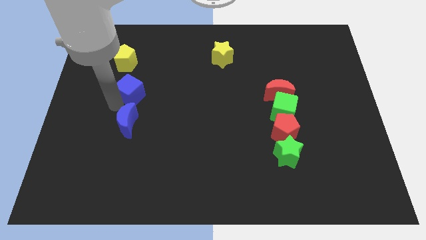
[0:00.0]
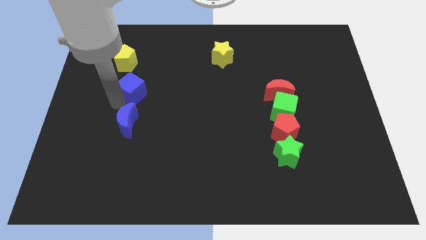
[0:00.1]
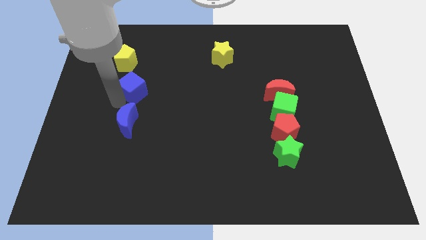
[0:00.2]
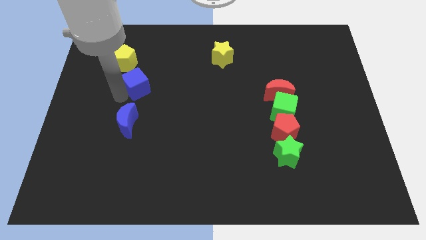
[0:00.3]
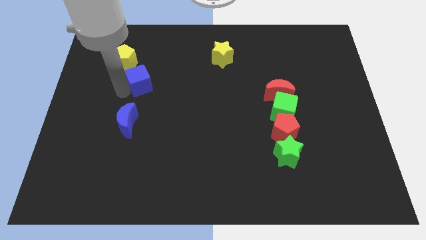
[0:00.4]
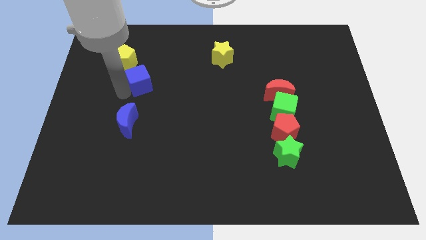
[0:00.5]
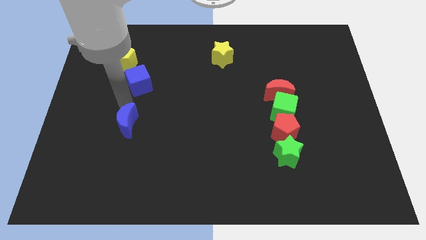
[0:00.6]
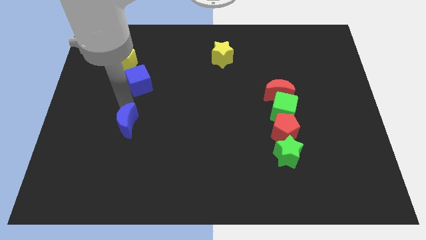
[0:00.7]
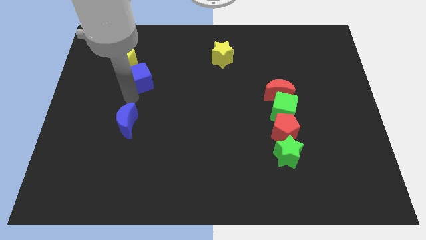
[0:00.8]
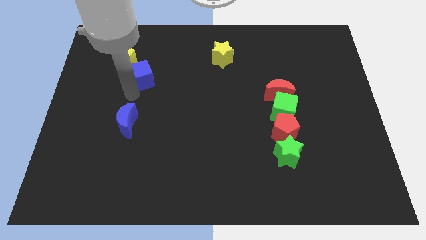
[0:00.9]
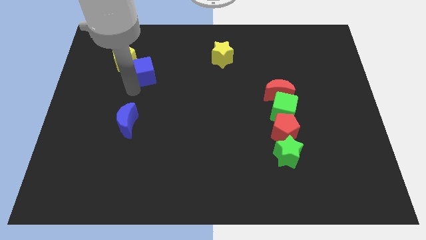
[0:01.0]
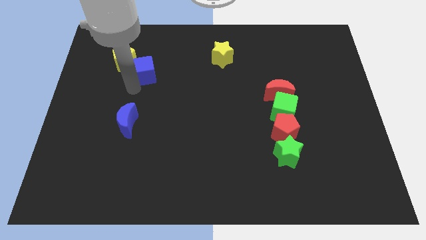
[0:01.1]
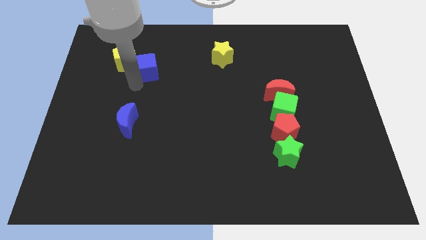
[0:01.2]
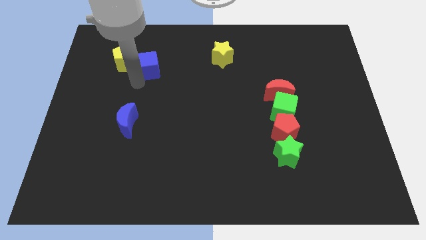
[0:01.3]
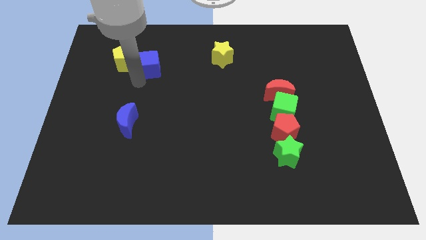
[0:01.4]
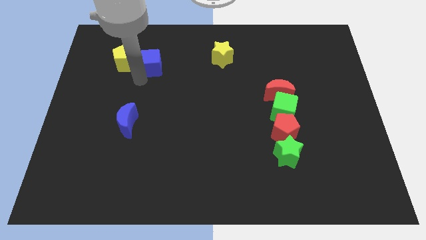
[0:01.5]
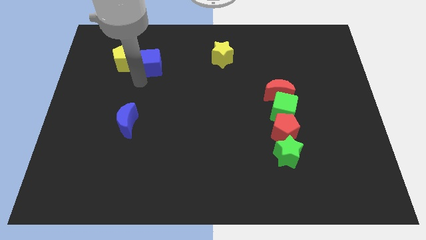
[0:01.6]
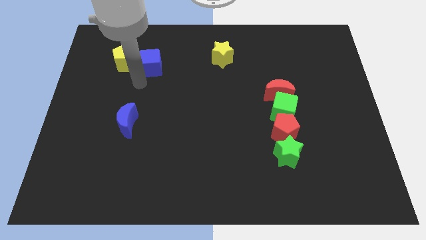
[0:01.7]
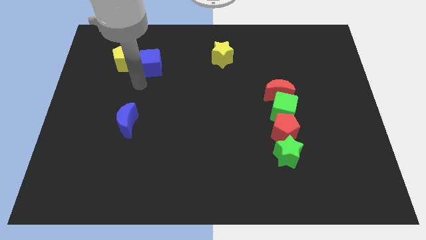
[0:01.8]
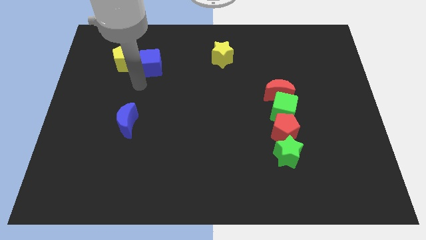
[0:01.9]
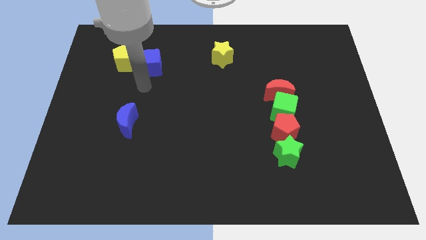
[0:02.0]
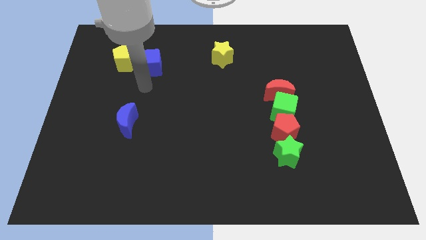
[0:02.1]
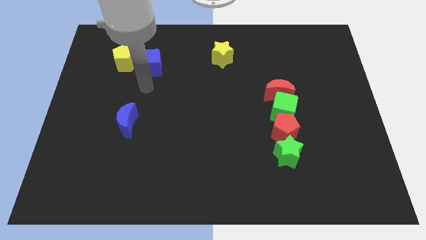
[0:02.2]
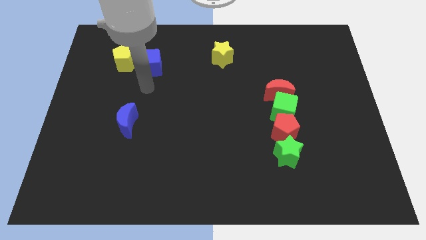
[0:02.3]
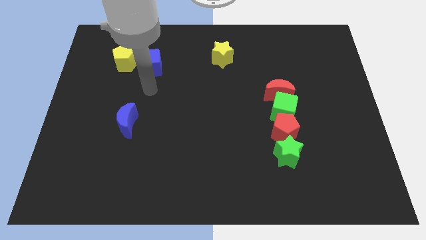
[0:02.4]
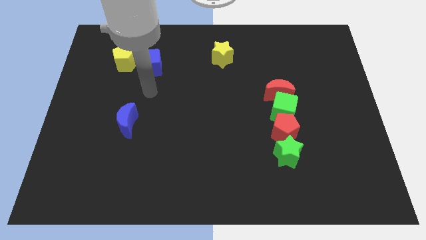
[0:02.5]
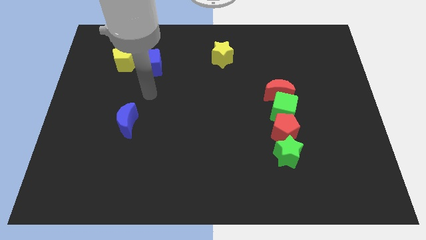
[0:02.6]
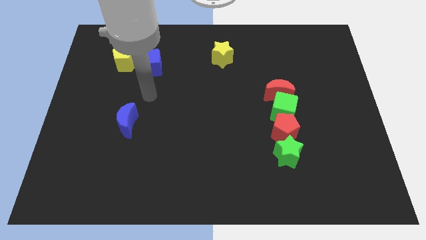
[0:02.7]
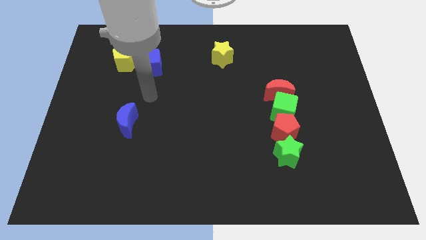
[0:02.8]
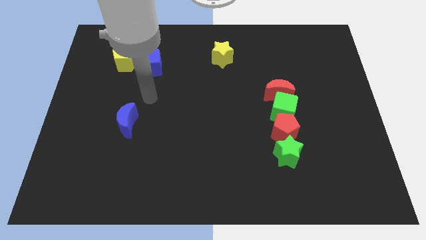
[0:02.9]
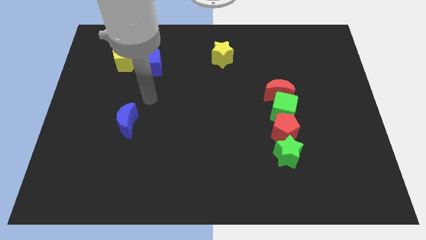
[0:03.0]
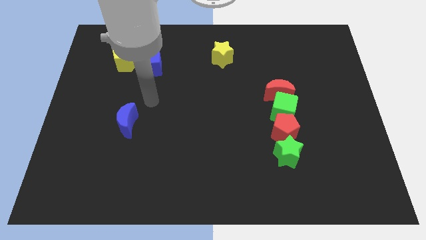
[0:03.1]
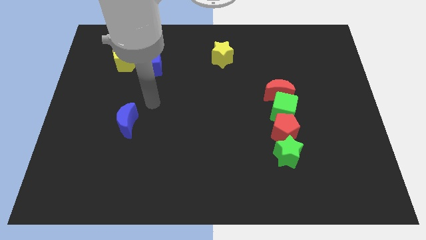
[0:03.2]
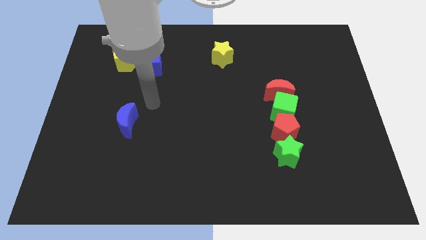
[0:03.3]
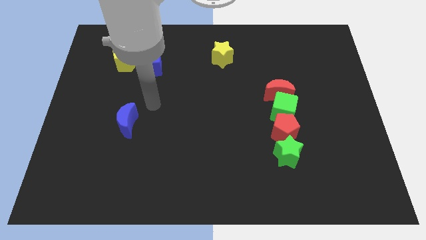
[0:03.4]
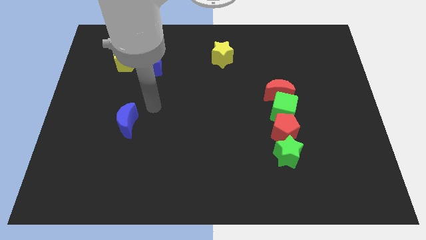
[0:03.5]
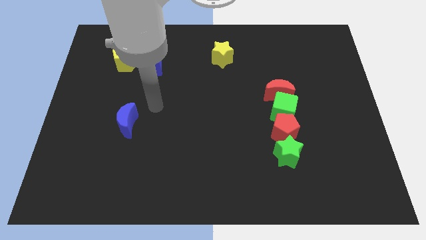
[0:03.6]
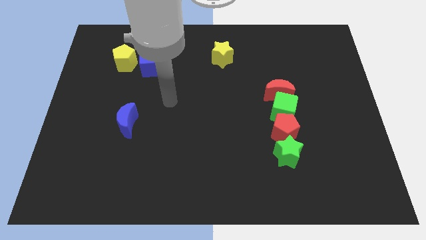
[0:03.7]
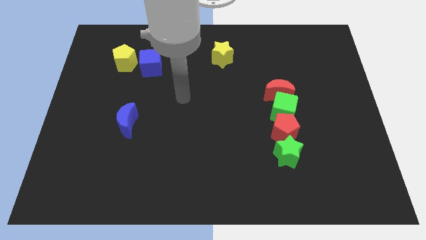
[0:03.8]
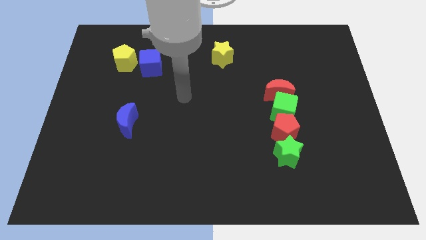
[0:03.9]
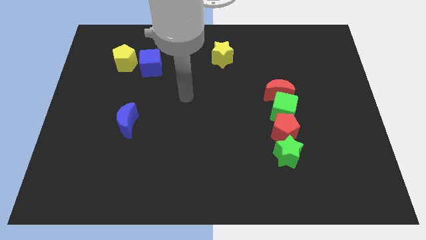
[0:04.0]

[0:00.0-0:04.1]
place blue cube right of yellow psntagon

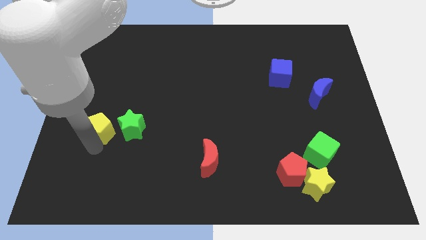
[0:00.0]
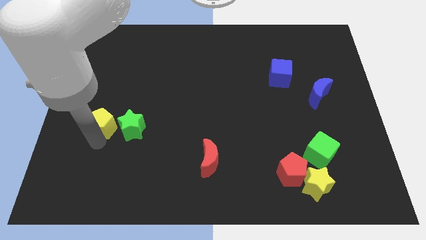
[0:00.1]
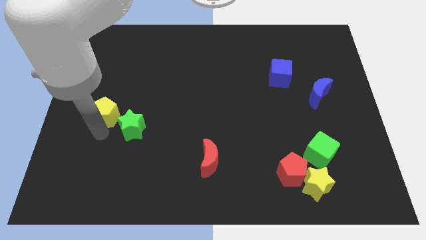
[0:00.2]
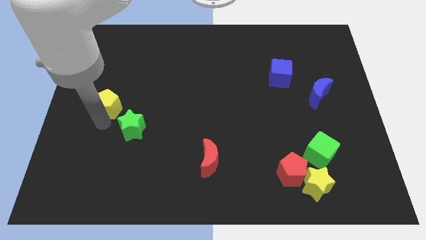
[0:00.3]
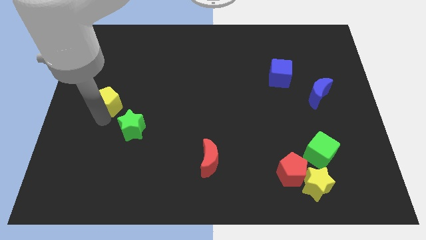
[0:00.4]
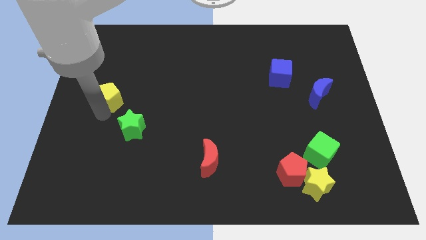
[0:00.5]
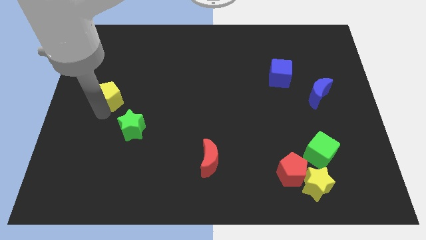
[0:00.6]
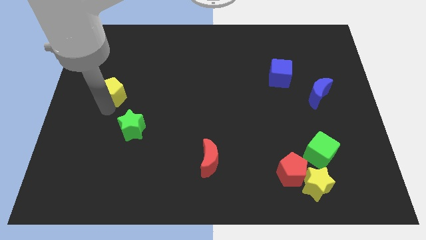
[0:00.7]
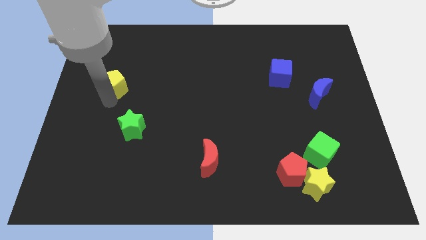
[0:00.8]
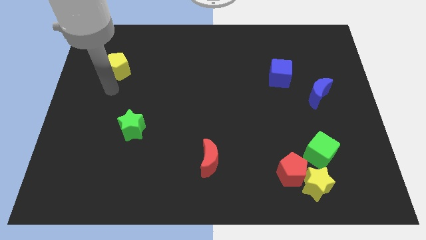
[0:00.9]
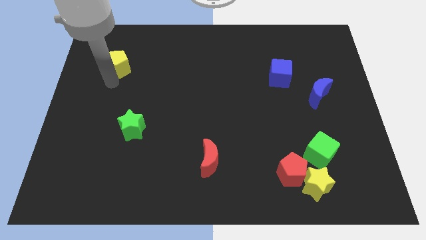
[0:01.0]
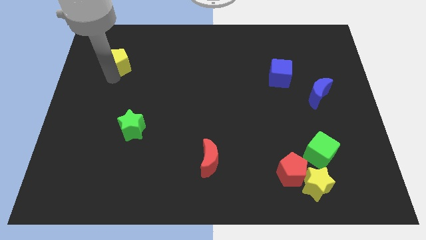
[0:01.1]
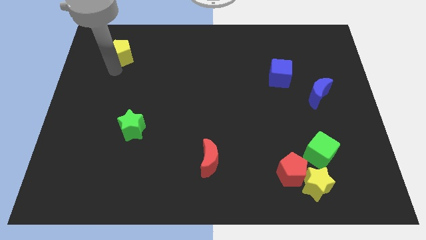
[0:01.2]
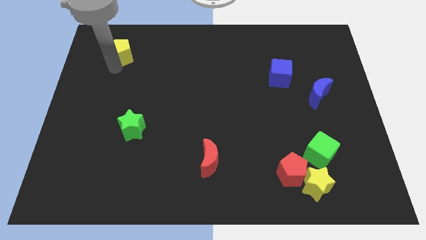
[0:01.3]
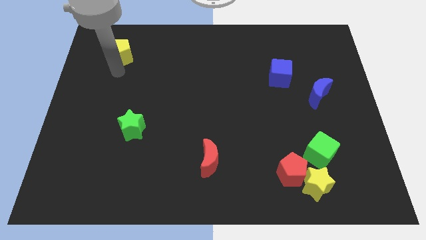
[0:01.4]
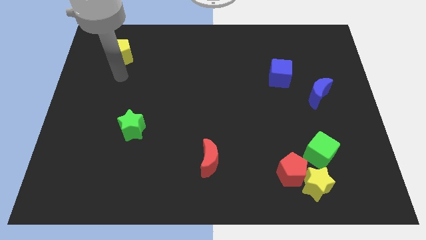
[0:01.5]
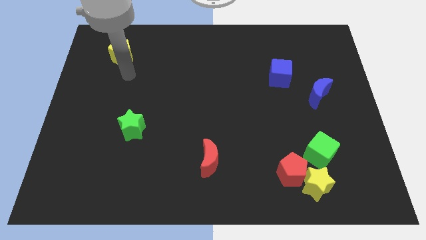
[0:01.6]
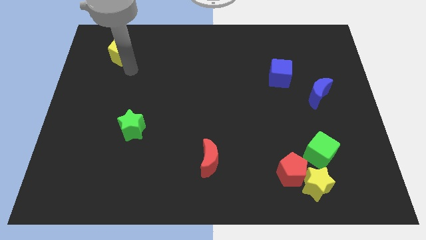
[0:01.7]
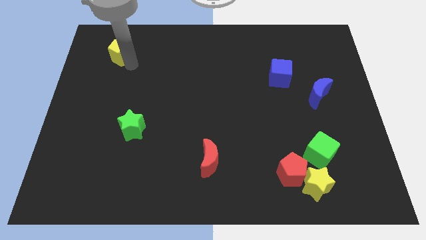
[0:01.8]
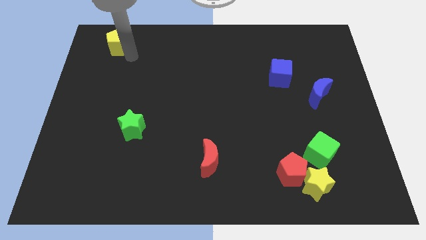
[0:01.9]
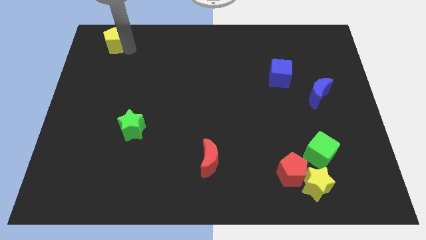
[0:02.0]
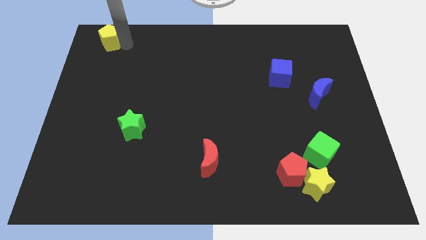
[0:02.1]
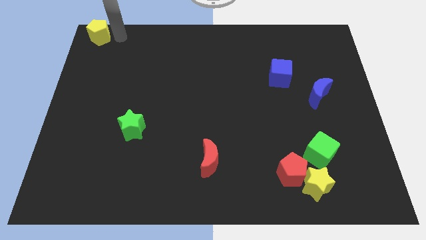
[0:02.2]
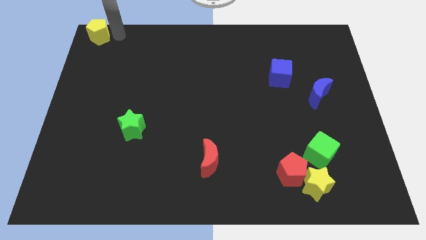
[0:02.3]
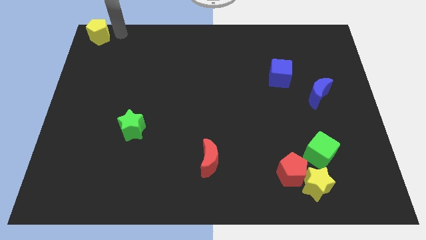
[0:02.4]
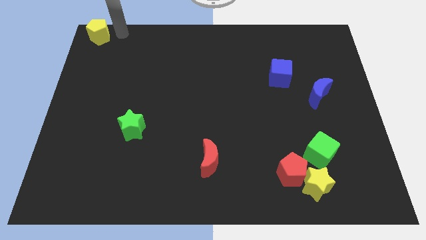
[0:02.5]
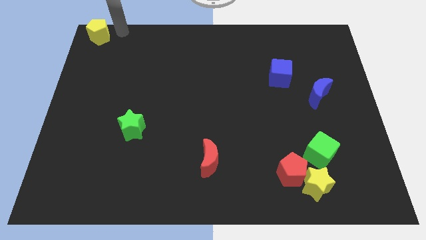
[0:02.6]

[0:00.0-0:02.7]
push yellow pentagon to the top

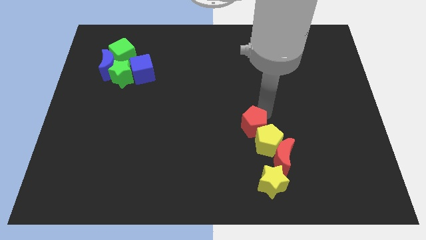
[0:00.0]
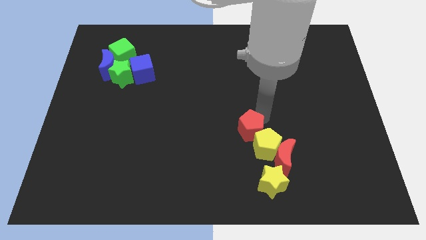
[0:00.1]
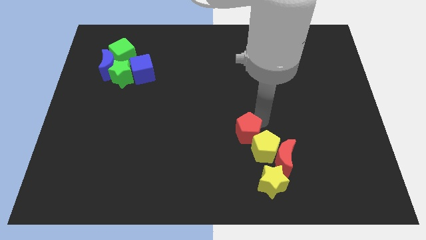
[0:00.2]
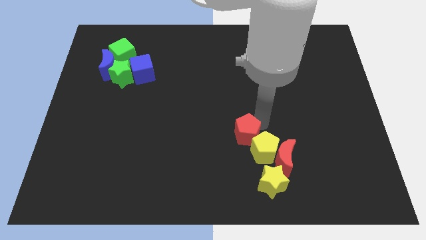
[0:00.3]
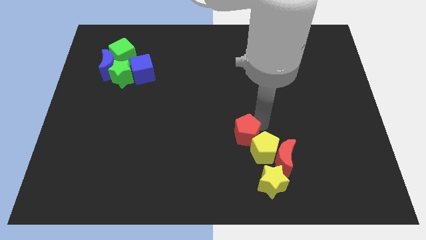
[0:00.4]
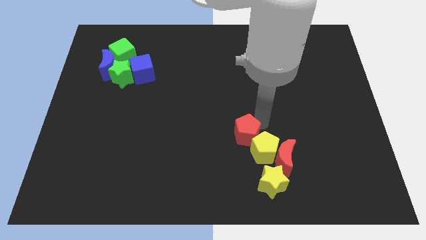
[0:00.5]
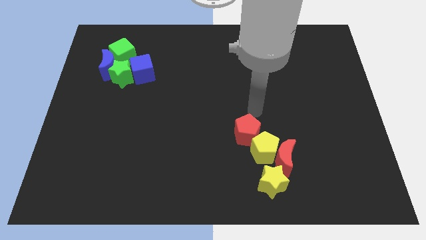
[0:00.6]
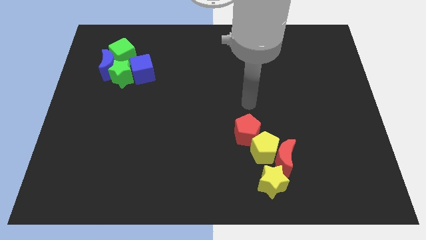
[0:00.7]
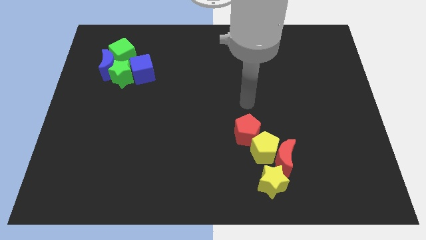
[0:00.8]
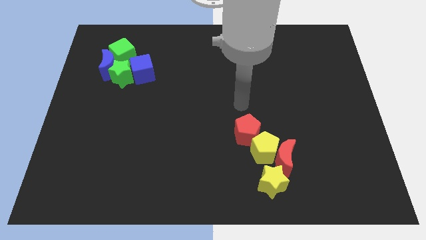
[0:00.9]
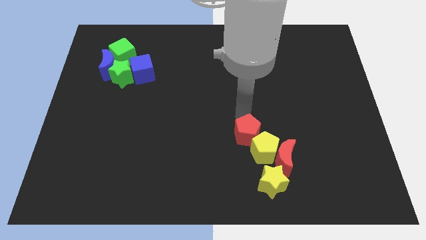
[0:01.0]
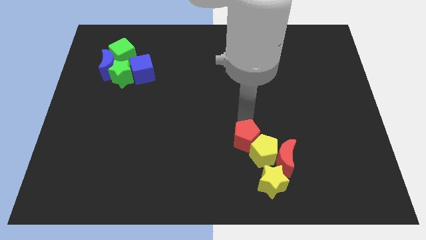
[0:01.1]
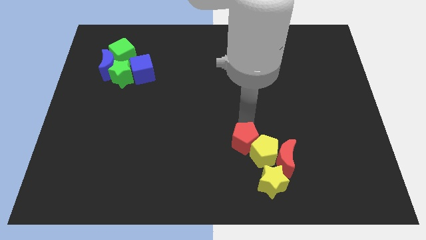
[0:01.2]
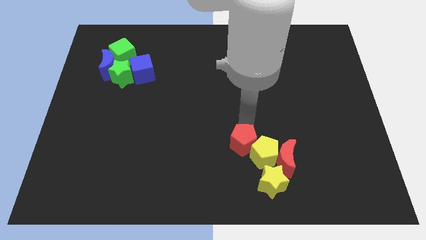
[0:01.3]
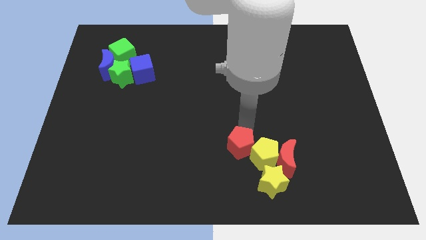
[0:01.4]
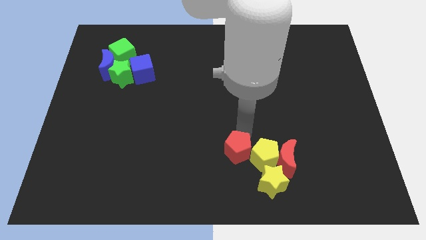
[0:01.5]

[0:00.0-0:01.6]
push red pentagon slightly downwards

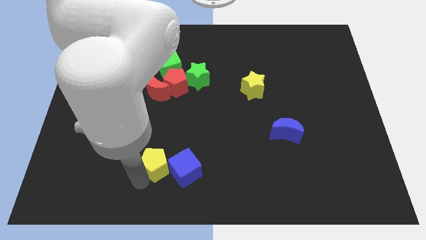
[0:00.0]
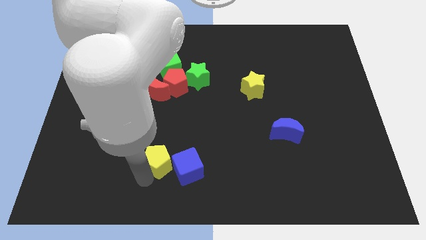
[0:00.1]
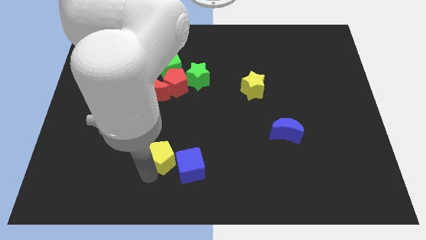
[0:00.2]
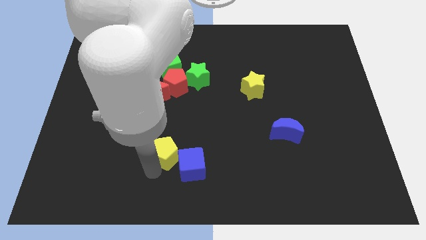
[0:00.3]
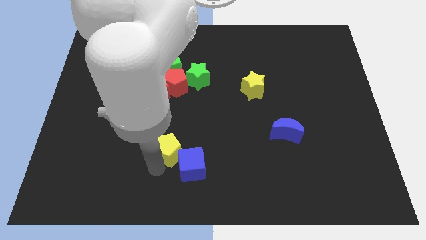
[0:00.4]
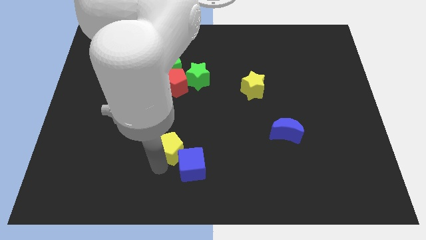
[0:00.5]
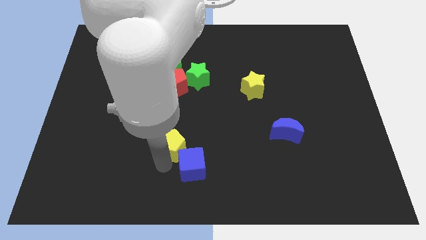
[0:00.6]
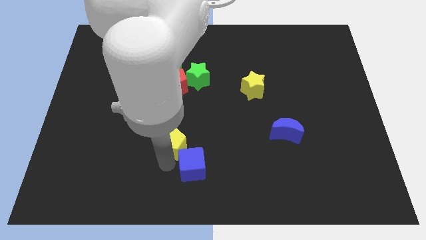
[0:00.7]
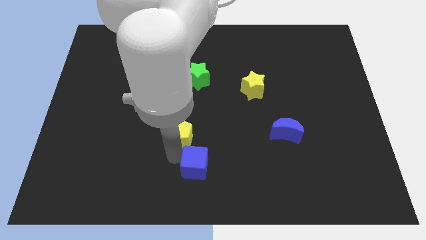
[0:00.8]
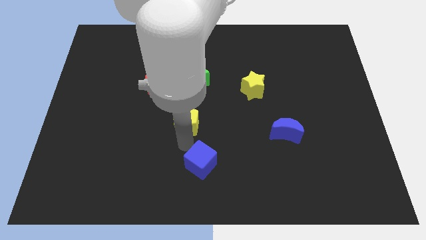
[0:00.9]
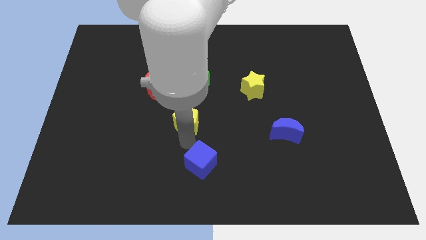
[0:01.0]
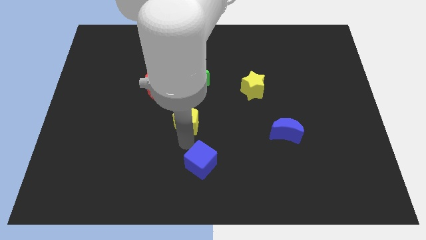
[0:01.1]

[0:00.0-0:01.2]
separate yellow pentagon from blue cube
